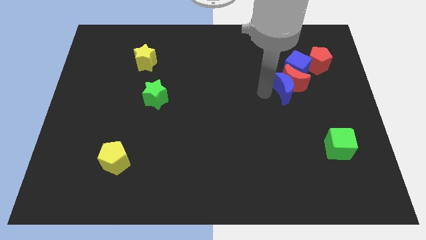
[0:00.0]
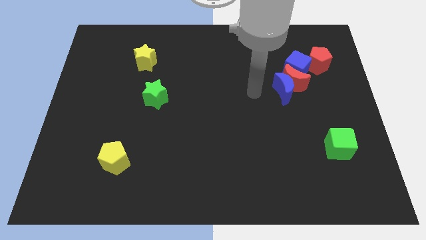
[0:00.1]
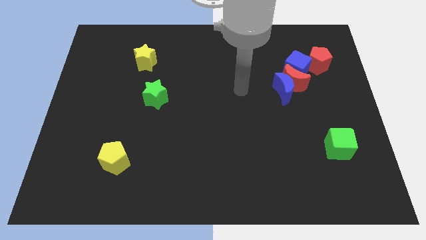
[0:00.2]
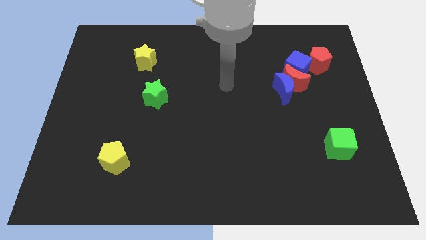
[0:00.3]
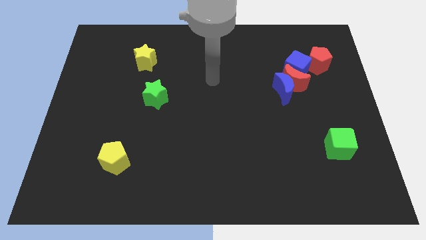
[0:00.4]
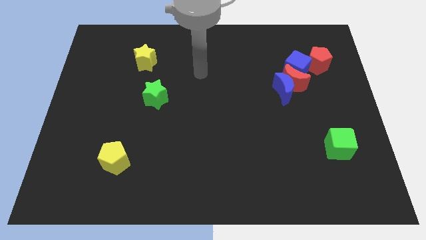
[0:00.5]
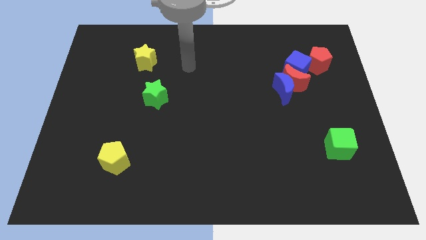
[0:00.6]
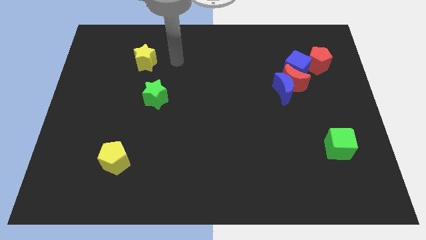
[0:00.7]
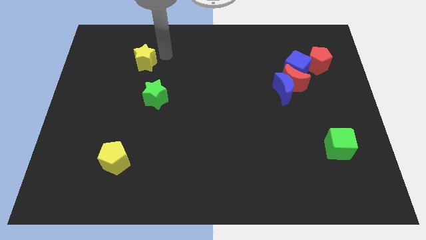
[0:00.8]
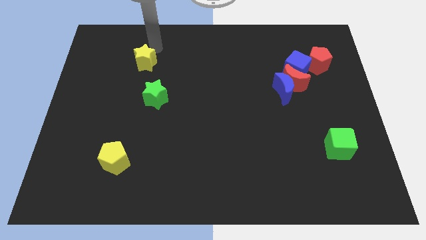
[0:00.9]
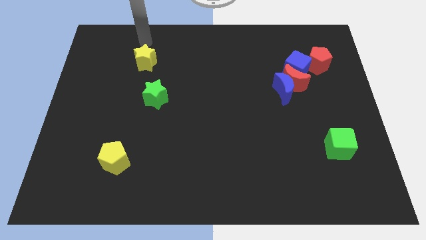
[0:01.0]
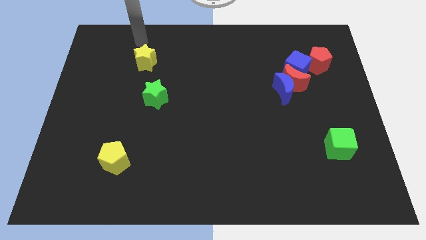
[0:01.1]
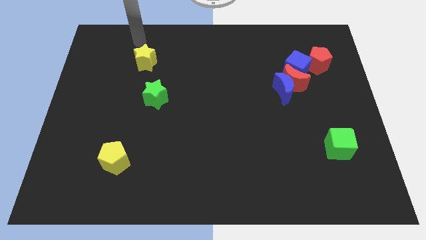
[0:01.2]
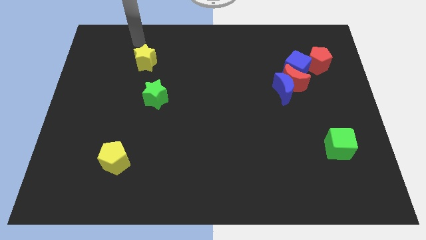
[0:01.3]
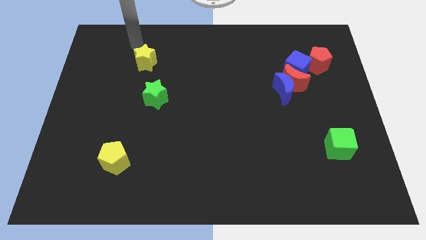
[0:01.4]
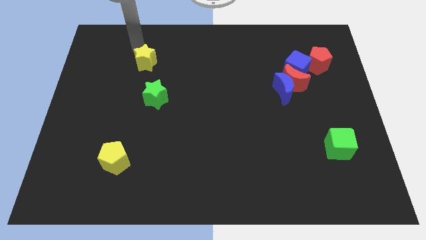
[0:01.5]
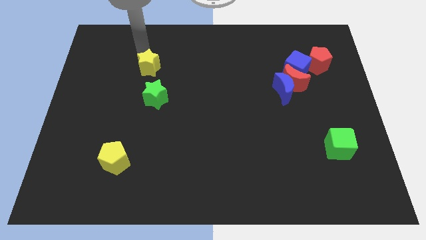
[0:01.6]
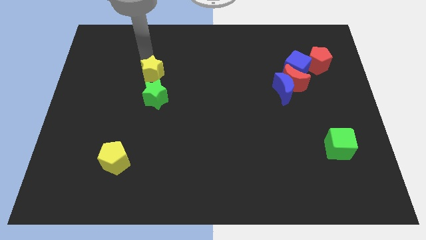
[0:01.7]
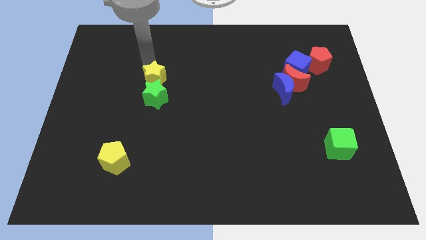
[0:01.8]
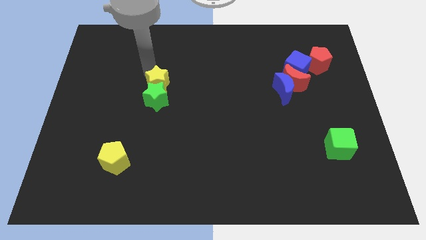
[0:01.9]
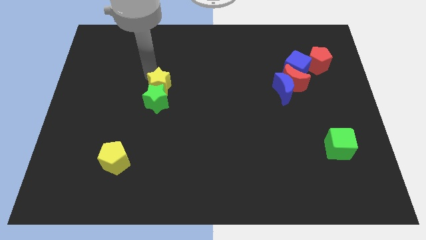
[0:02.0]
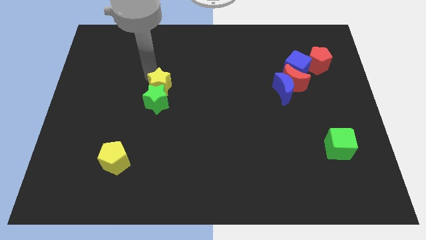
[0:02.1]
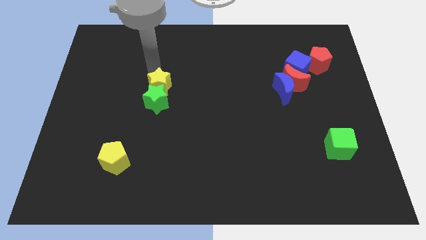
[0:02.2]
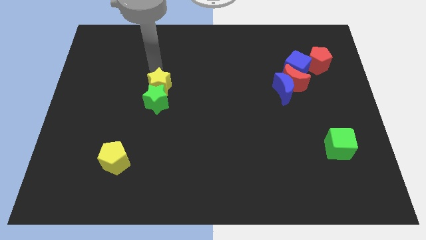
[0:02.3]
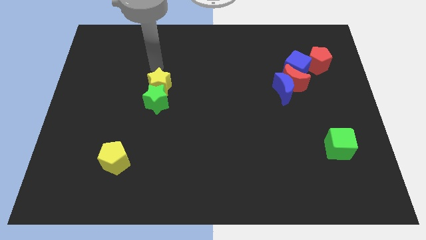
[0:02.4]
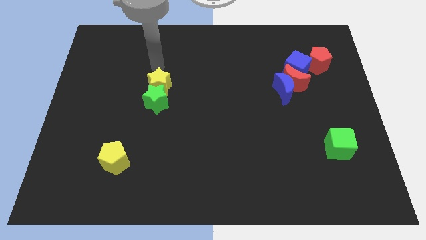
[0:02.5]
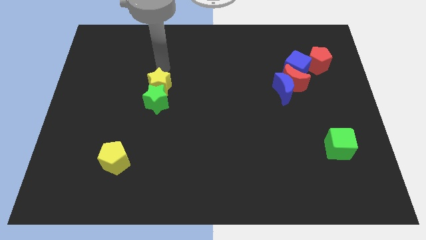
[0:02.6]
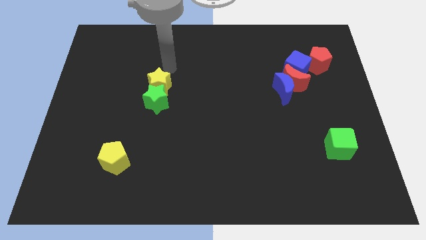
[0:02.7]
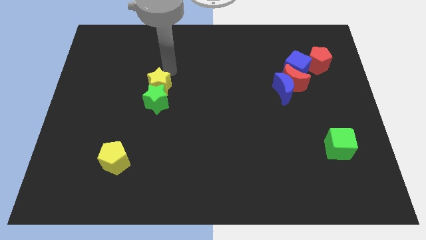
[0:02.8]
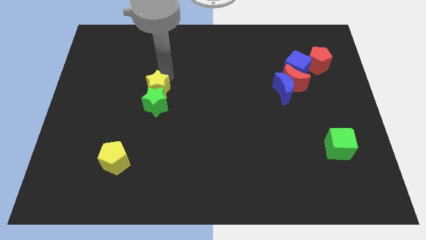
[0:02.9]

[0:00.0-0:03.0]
push the yellow star into the green star

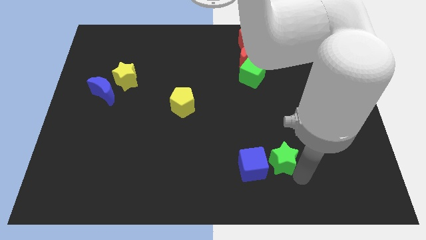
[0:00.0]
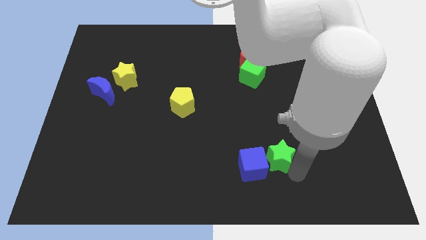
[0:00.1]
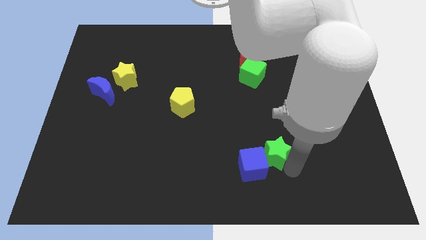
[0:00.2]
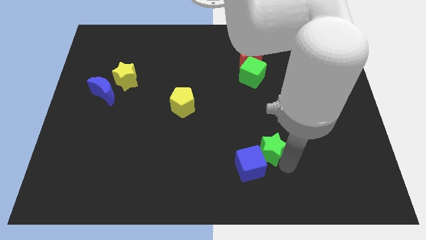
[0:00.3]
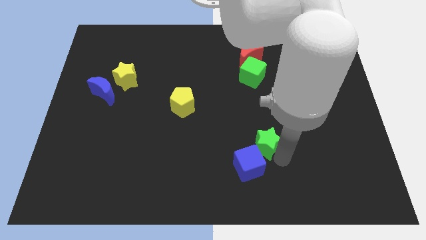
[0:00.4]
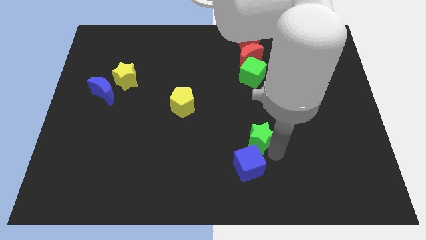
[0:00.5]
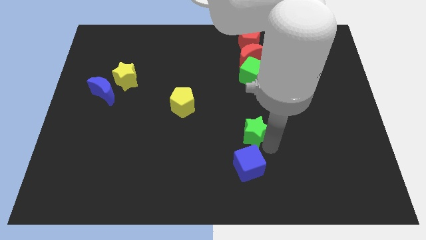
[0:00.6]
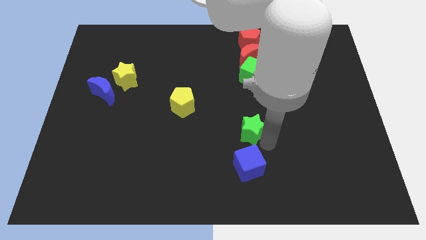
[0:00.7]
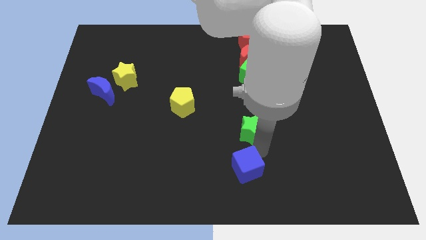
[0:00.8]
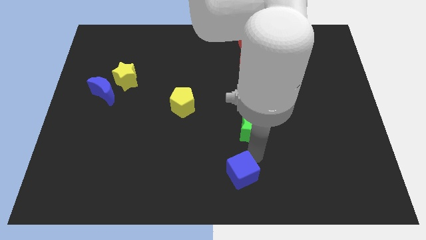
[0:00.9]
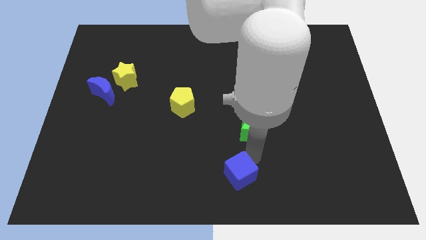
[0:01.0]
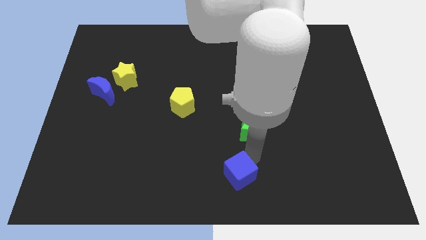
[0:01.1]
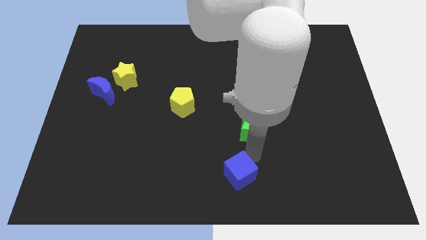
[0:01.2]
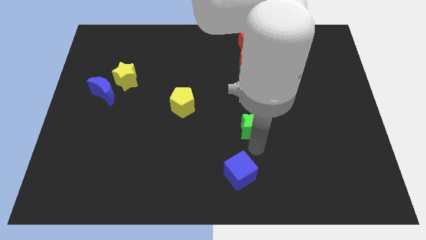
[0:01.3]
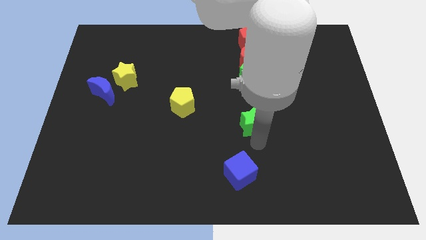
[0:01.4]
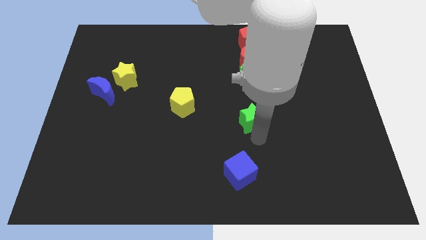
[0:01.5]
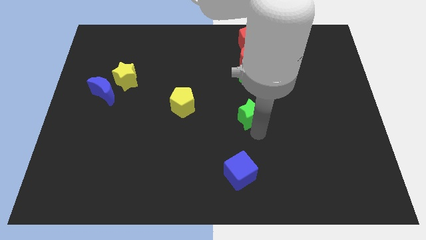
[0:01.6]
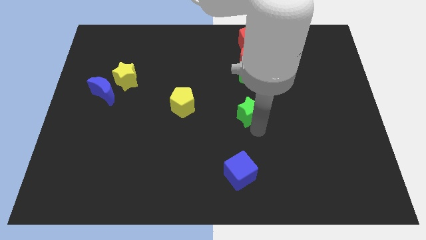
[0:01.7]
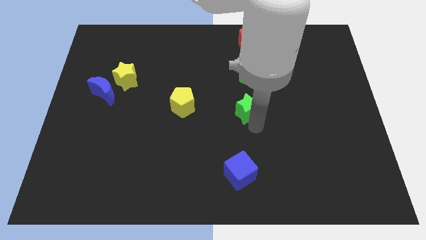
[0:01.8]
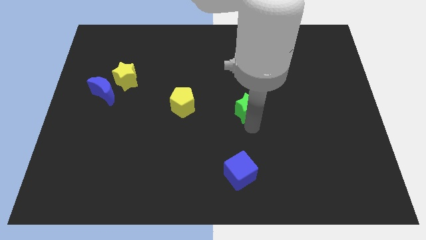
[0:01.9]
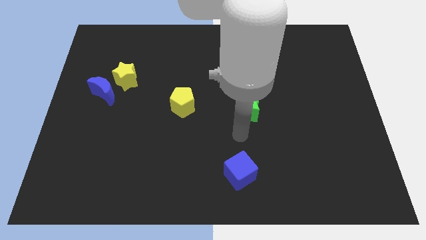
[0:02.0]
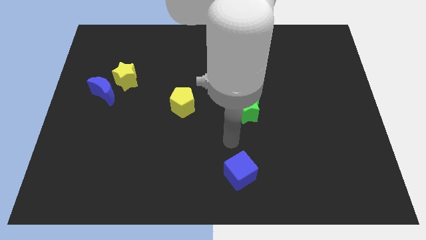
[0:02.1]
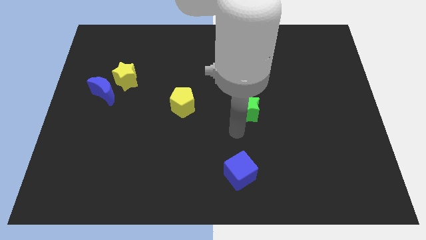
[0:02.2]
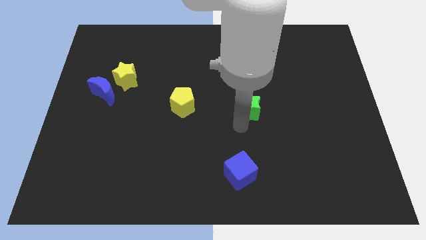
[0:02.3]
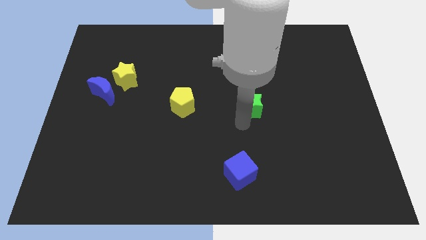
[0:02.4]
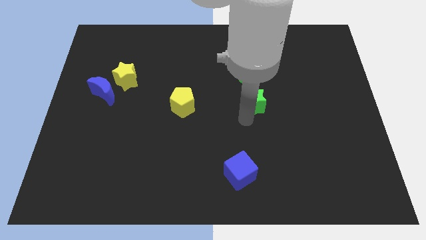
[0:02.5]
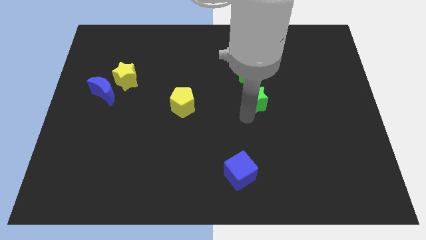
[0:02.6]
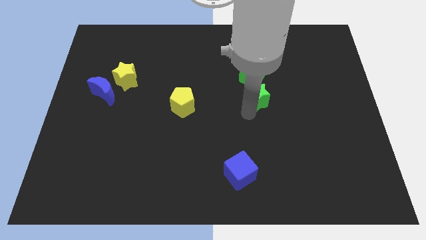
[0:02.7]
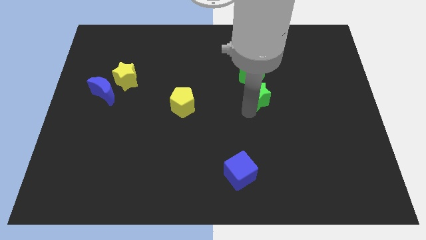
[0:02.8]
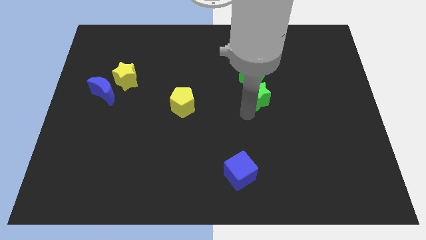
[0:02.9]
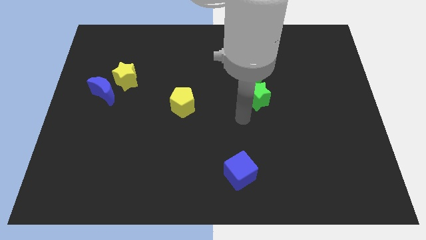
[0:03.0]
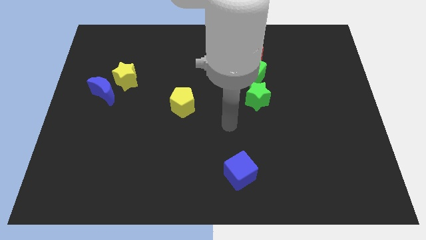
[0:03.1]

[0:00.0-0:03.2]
place the green star vertically below the green cube

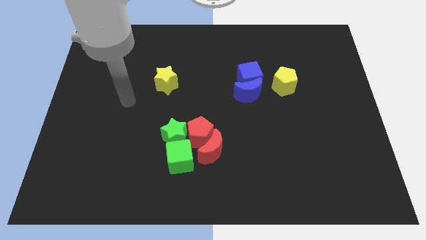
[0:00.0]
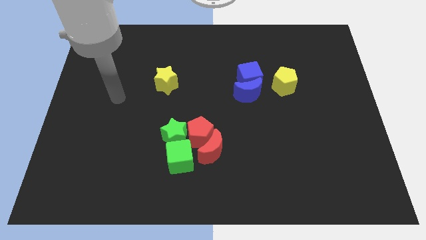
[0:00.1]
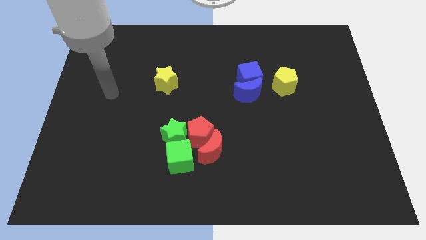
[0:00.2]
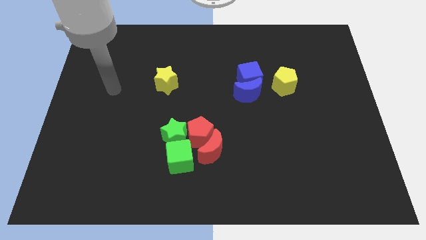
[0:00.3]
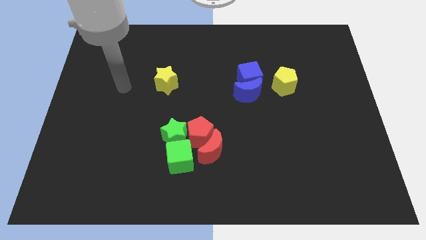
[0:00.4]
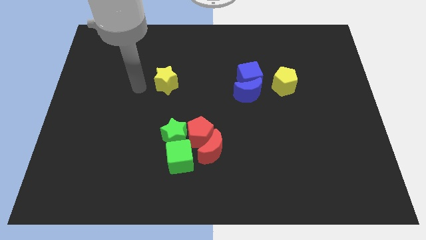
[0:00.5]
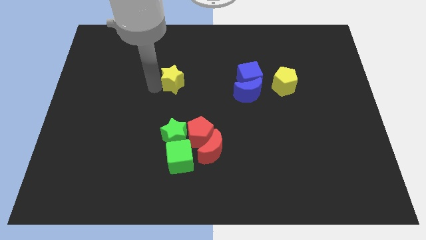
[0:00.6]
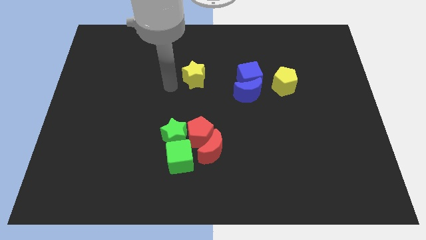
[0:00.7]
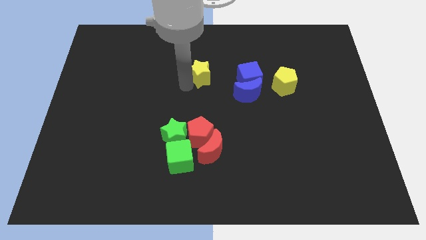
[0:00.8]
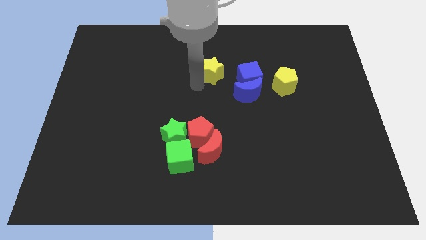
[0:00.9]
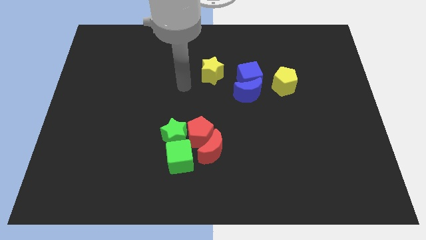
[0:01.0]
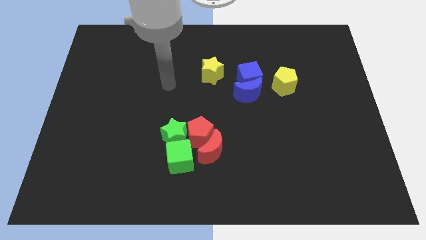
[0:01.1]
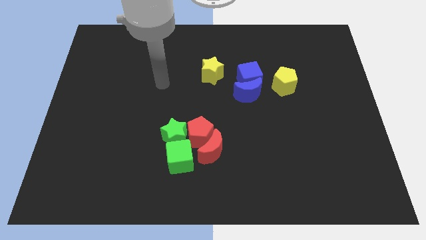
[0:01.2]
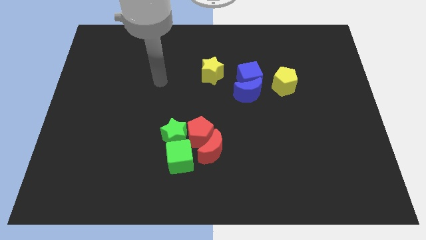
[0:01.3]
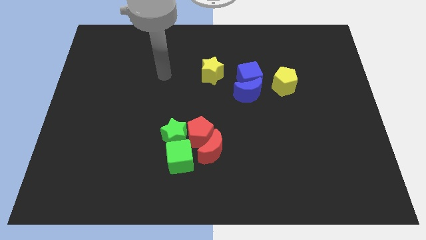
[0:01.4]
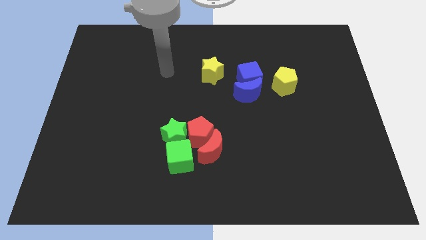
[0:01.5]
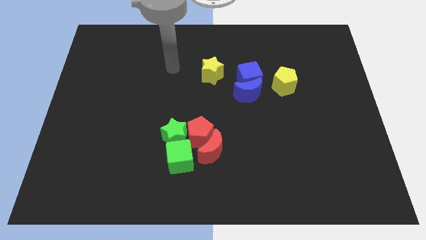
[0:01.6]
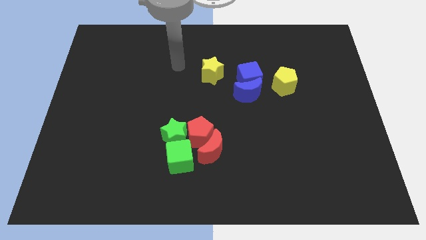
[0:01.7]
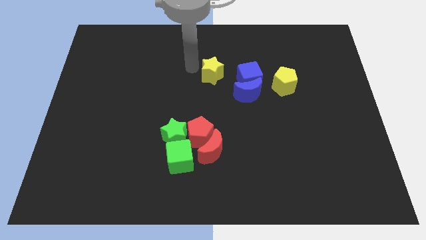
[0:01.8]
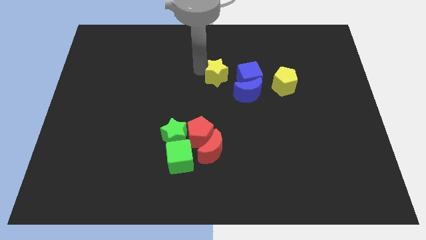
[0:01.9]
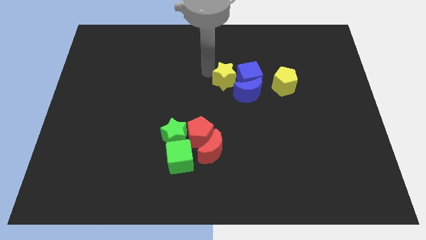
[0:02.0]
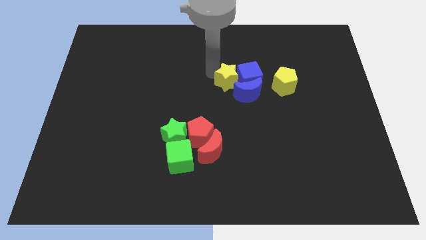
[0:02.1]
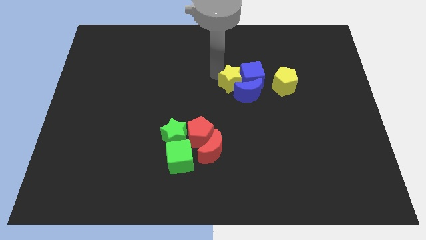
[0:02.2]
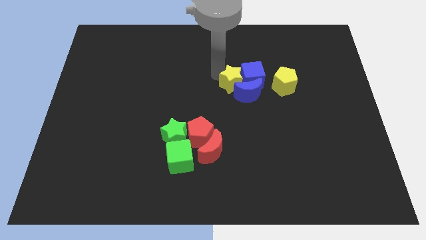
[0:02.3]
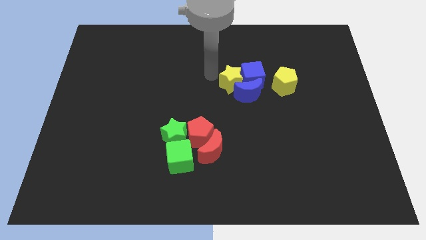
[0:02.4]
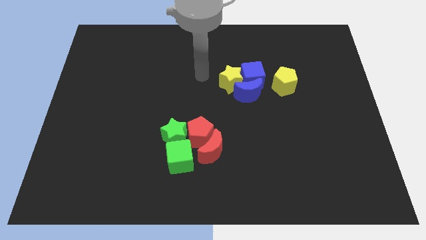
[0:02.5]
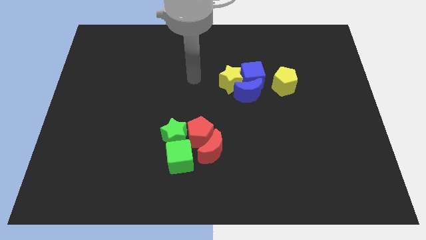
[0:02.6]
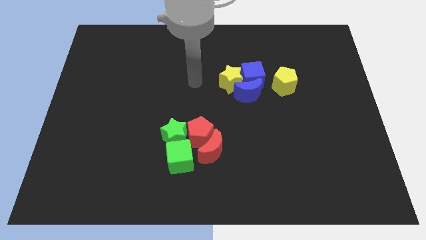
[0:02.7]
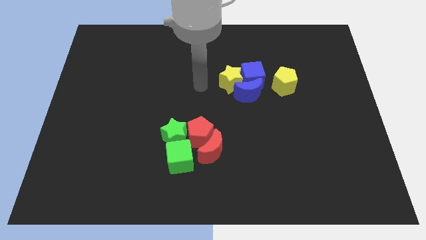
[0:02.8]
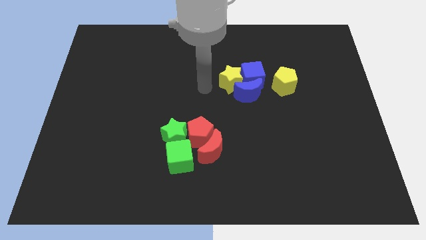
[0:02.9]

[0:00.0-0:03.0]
push the yellow star into the blue blocks

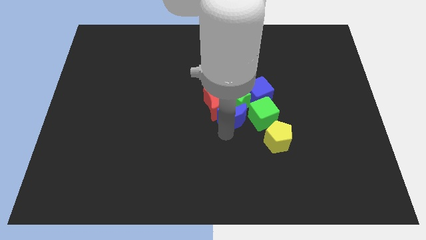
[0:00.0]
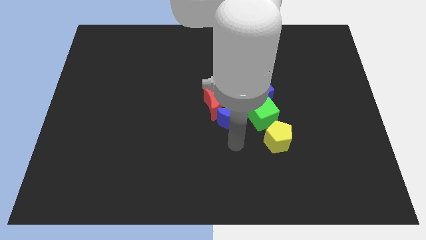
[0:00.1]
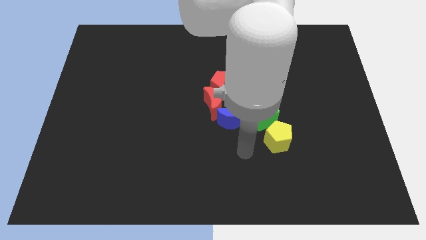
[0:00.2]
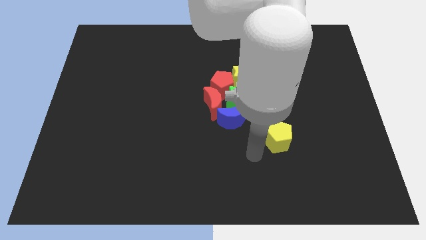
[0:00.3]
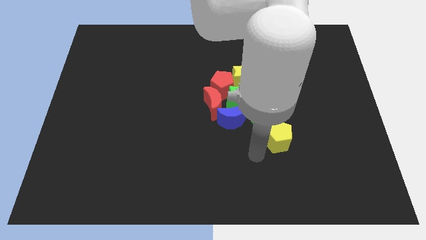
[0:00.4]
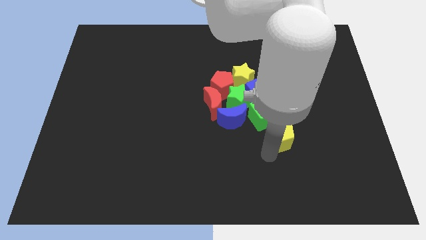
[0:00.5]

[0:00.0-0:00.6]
slightly move the blue crescent
